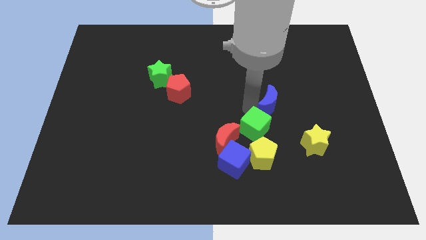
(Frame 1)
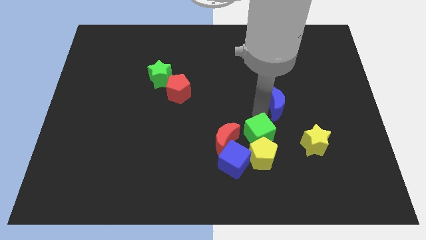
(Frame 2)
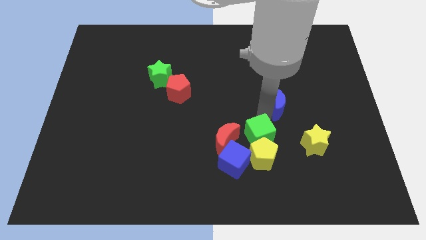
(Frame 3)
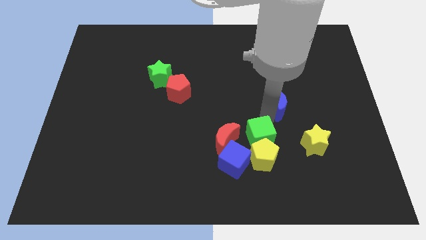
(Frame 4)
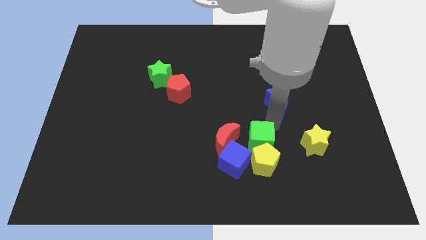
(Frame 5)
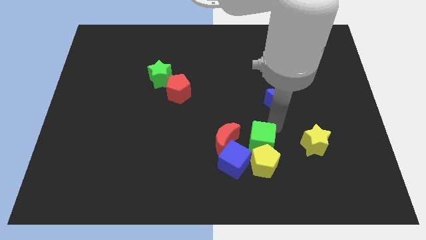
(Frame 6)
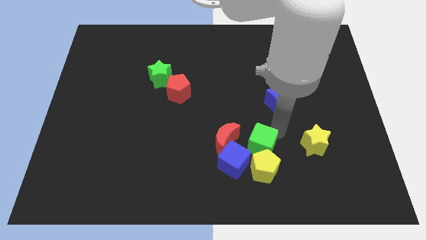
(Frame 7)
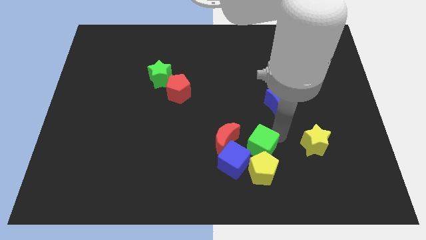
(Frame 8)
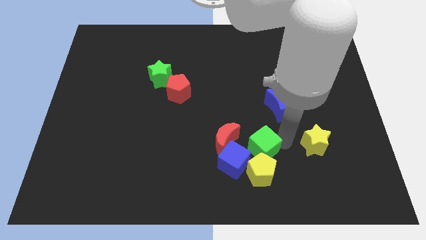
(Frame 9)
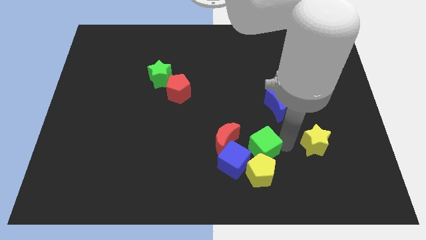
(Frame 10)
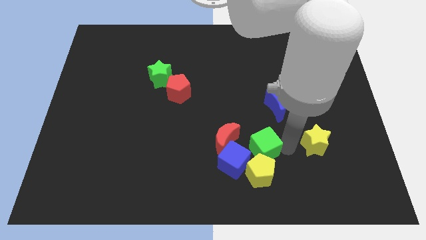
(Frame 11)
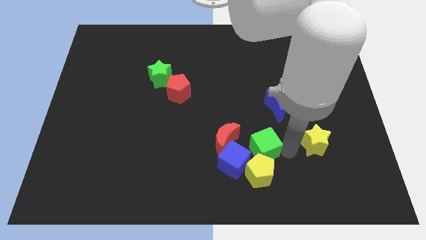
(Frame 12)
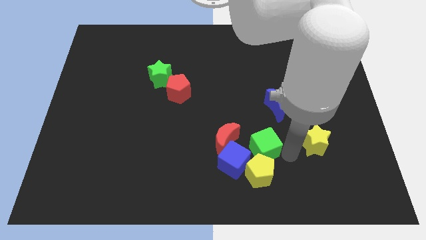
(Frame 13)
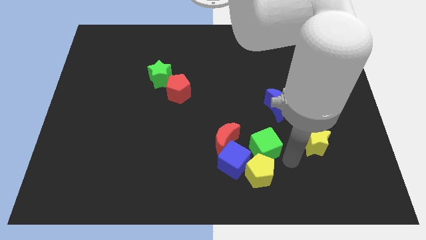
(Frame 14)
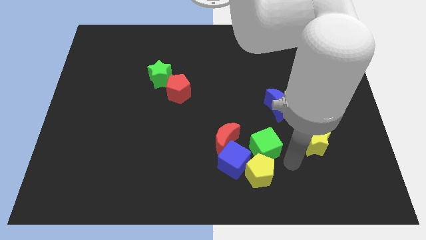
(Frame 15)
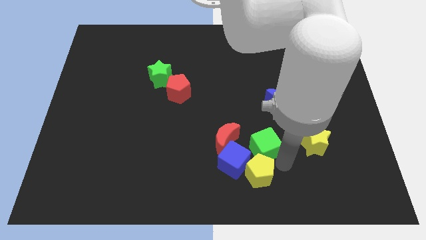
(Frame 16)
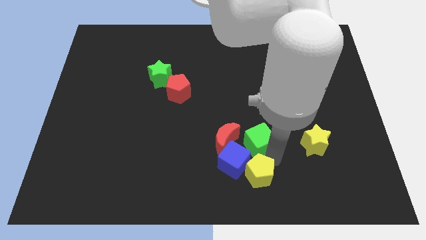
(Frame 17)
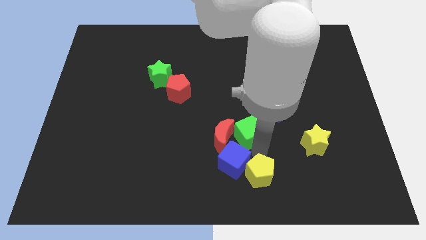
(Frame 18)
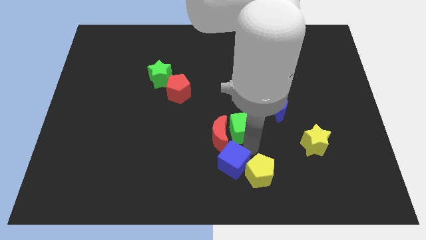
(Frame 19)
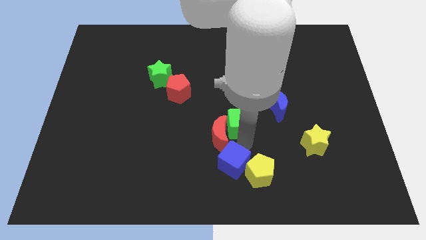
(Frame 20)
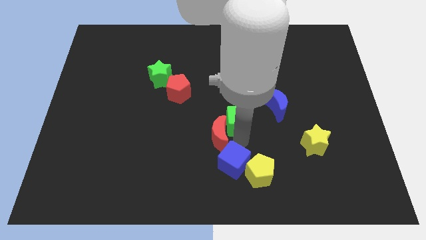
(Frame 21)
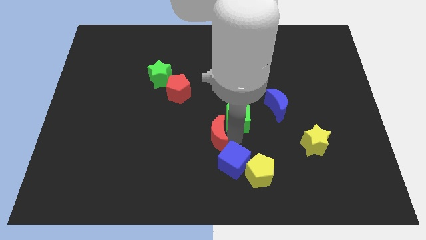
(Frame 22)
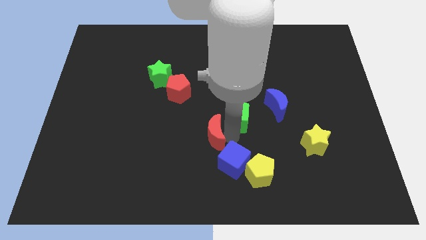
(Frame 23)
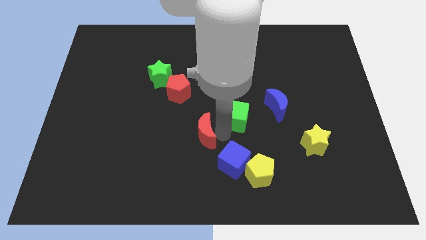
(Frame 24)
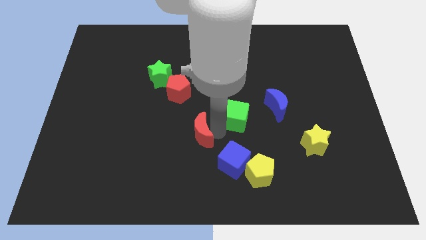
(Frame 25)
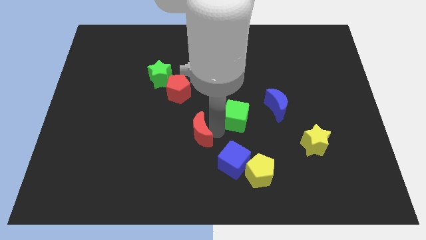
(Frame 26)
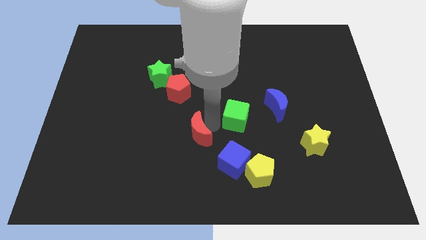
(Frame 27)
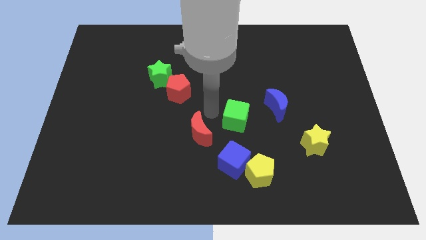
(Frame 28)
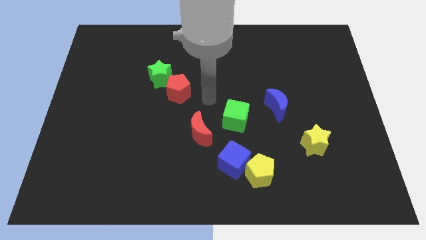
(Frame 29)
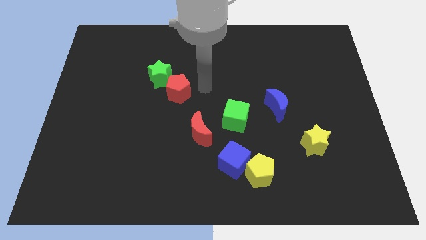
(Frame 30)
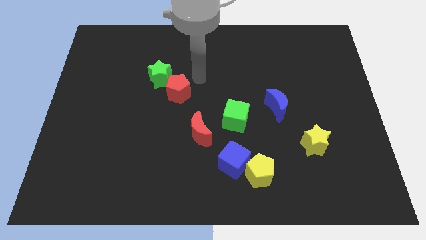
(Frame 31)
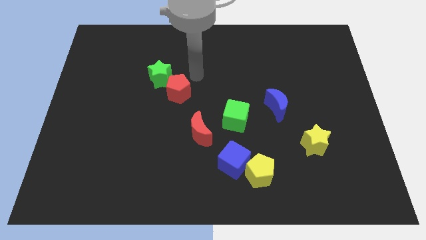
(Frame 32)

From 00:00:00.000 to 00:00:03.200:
separate the green cube from blue moon yellow star blue cube and red moon

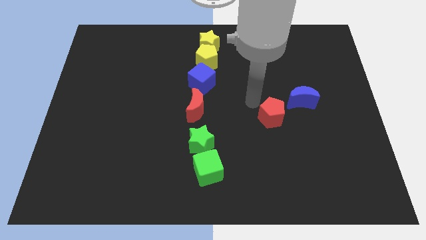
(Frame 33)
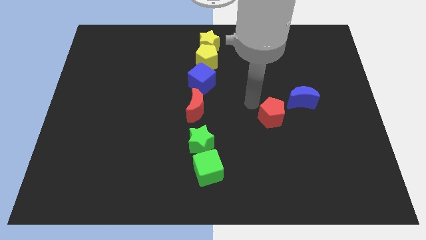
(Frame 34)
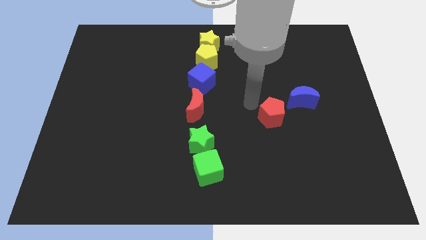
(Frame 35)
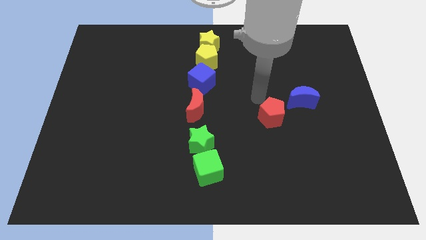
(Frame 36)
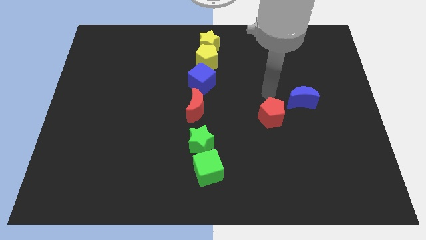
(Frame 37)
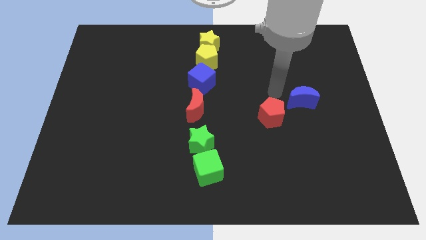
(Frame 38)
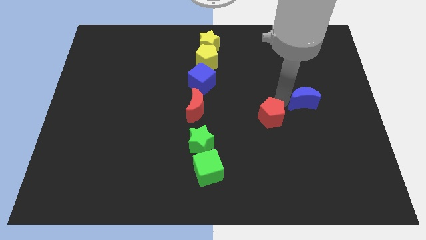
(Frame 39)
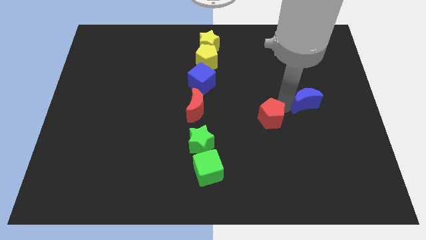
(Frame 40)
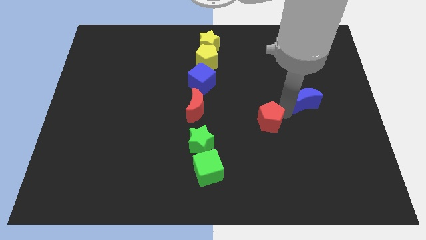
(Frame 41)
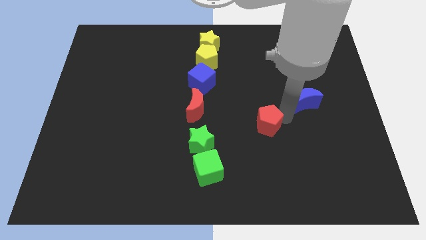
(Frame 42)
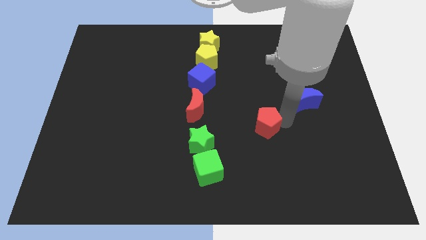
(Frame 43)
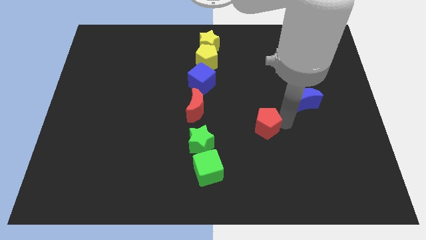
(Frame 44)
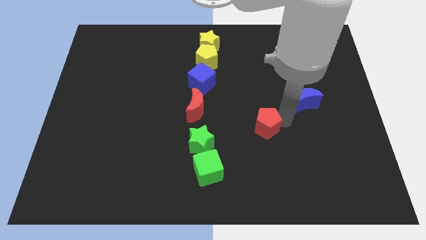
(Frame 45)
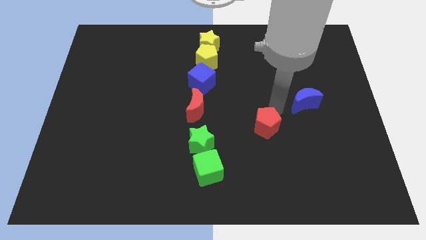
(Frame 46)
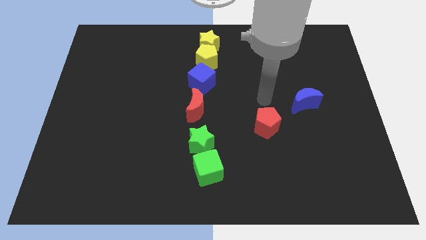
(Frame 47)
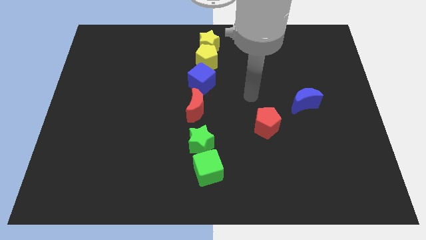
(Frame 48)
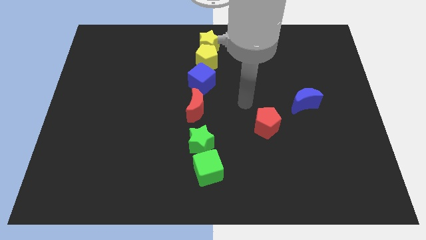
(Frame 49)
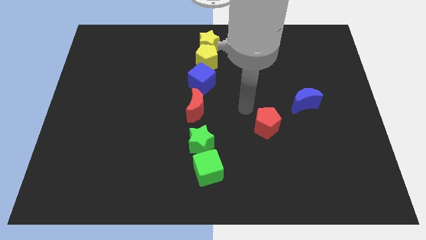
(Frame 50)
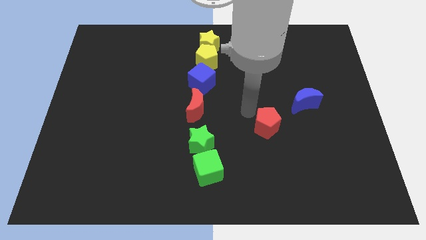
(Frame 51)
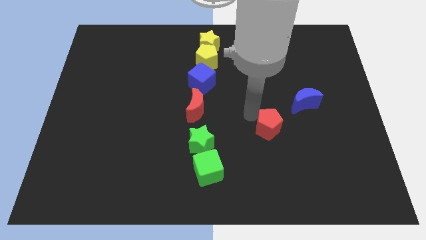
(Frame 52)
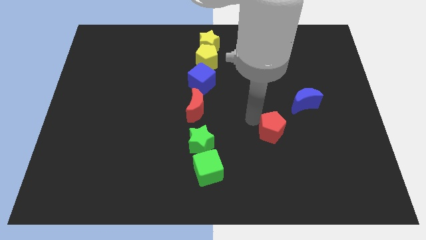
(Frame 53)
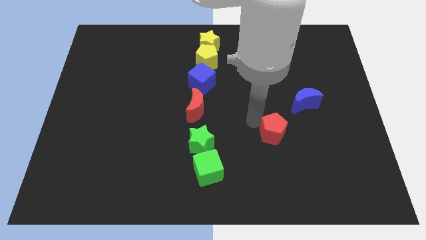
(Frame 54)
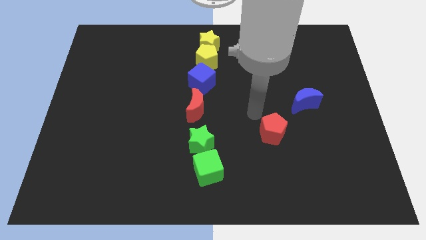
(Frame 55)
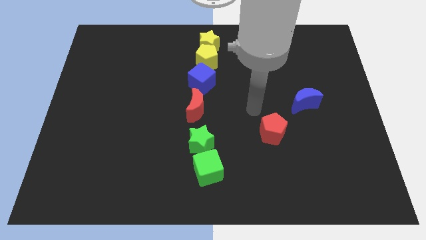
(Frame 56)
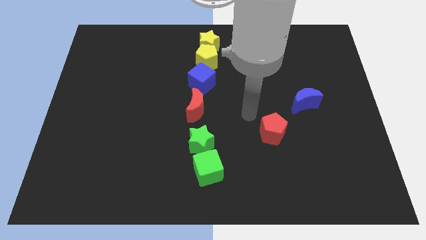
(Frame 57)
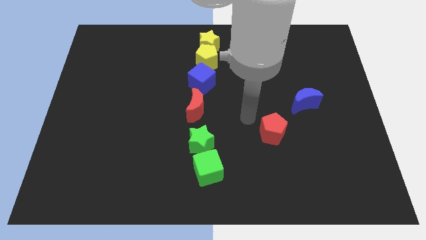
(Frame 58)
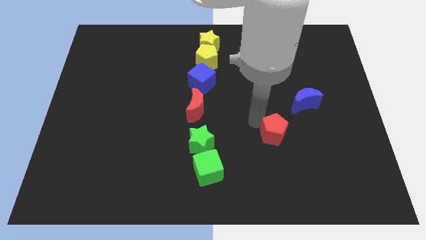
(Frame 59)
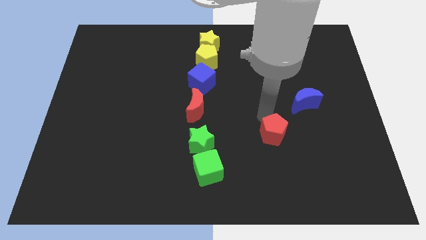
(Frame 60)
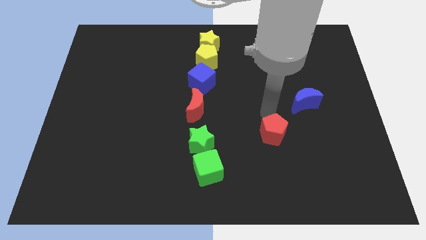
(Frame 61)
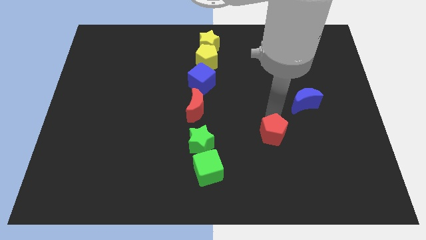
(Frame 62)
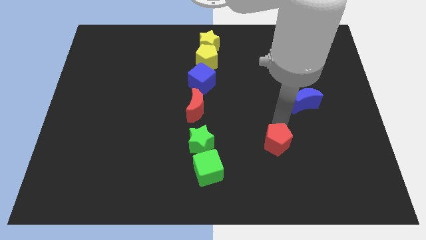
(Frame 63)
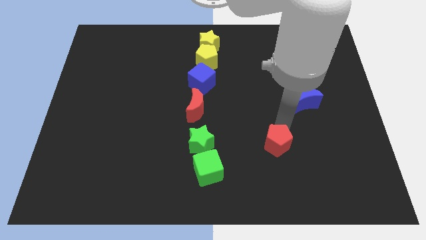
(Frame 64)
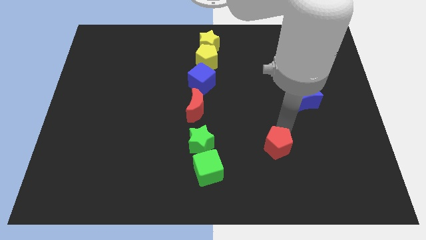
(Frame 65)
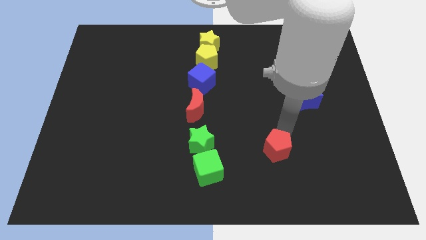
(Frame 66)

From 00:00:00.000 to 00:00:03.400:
move the red pentagon parallel right to the green star

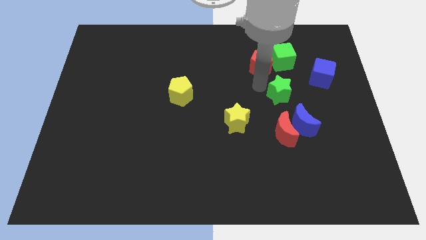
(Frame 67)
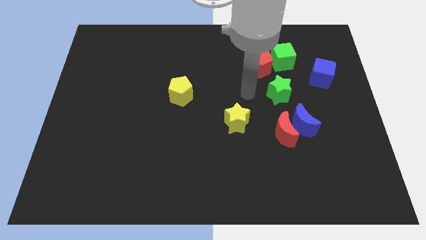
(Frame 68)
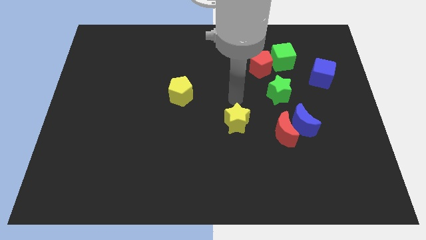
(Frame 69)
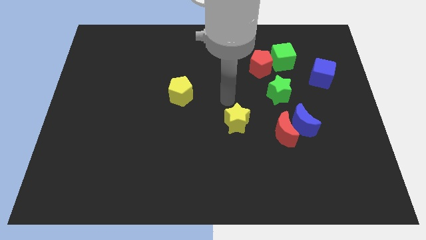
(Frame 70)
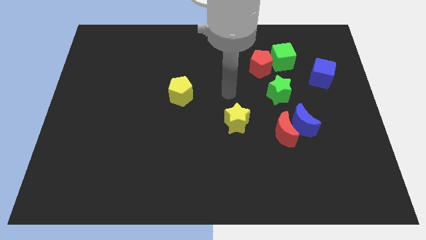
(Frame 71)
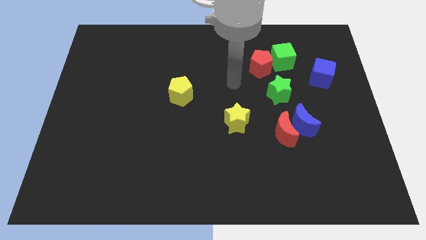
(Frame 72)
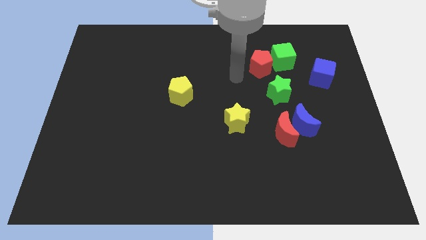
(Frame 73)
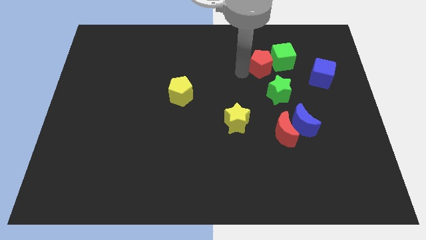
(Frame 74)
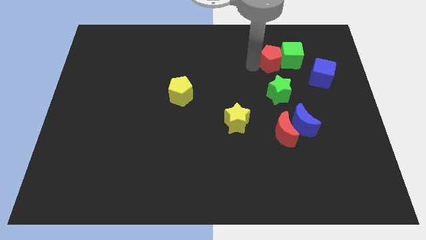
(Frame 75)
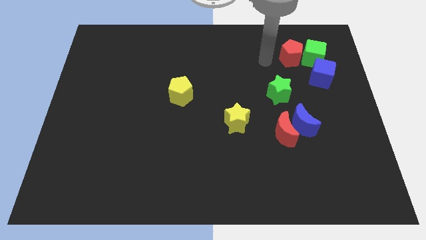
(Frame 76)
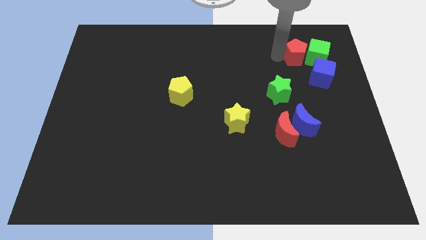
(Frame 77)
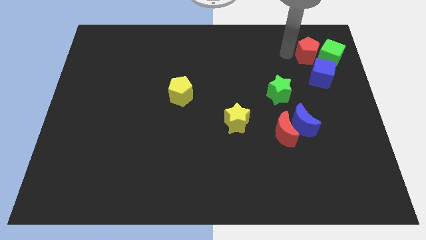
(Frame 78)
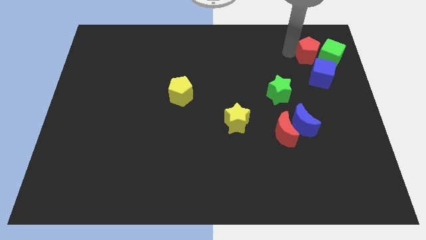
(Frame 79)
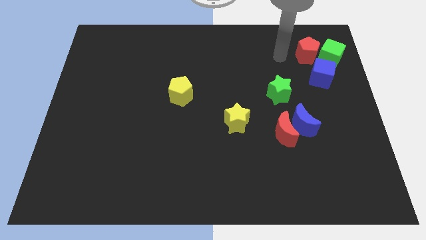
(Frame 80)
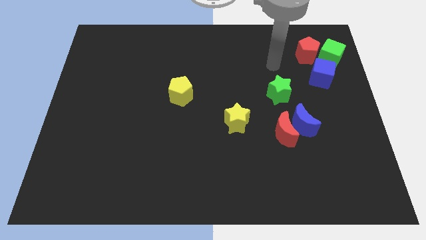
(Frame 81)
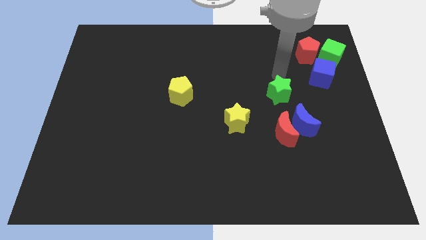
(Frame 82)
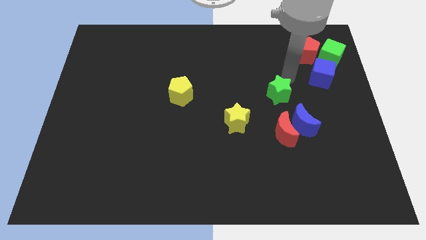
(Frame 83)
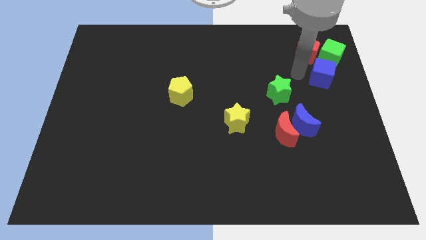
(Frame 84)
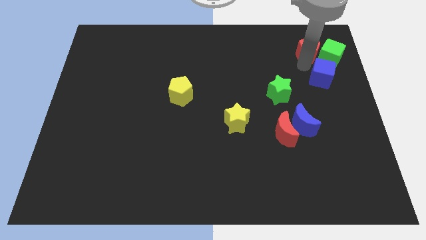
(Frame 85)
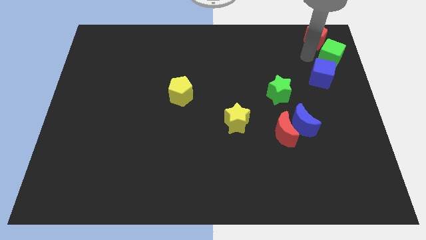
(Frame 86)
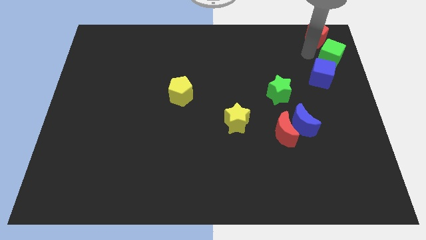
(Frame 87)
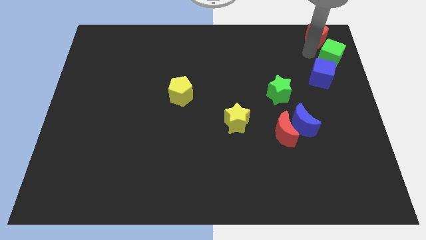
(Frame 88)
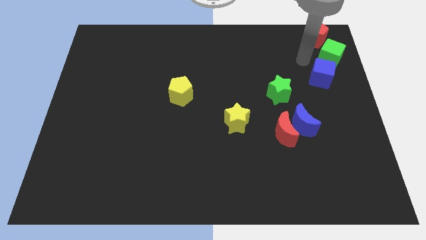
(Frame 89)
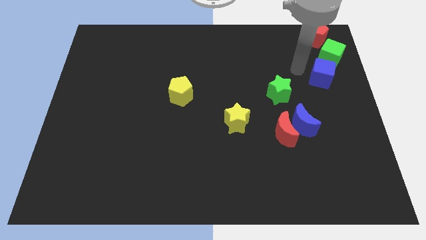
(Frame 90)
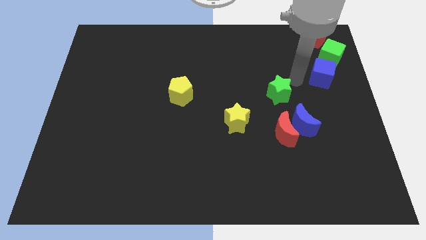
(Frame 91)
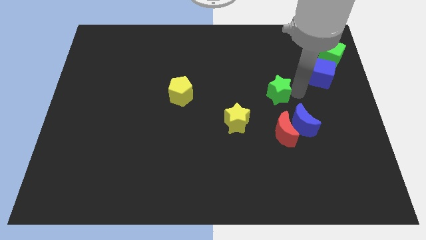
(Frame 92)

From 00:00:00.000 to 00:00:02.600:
push the green cube and the red pentagon to the top of the blue cube
